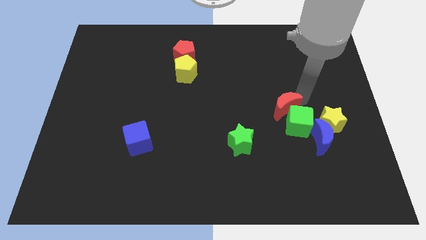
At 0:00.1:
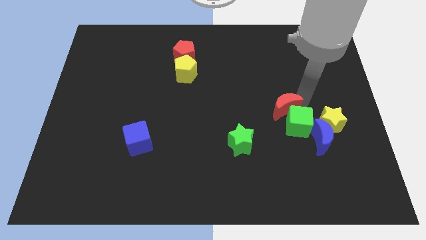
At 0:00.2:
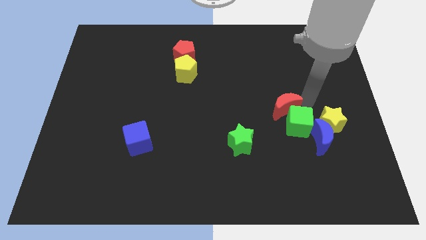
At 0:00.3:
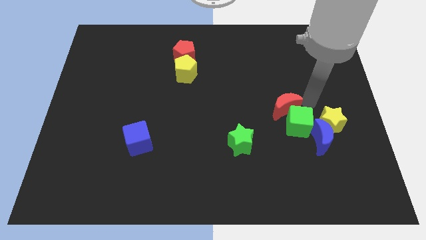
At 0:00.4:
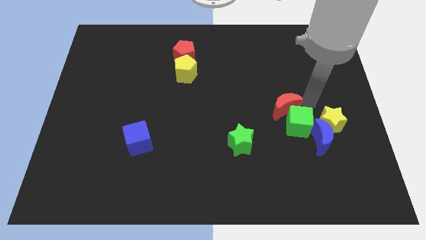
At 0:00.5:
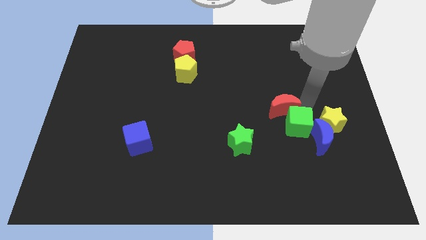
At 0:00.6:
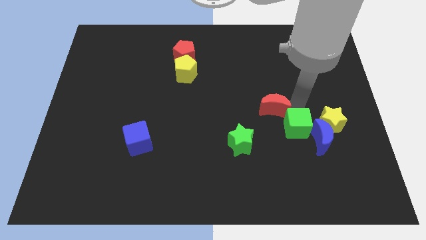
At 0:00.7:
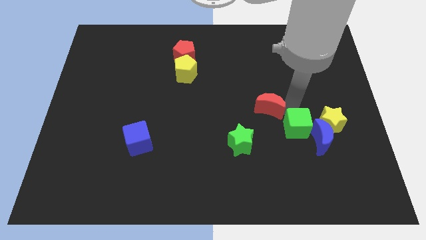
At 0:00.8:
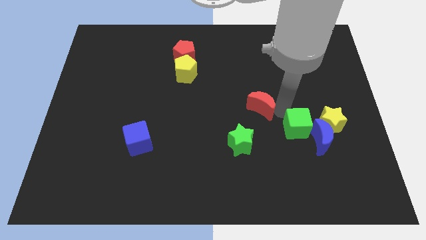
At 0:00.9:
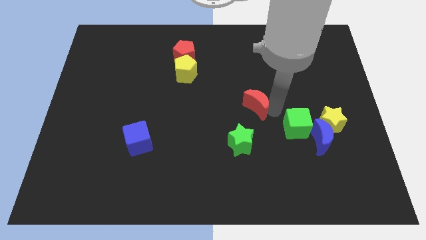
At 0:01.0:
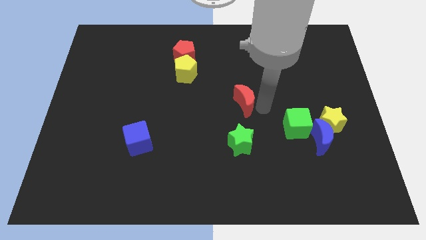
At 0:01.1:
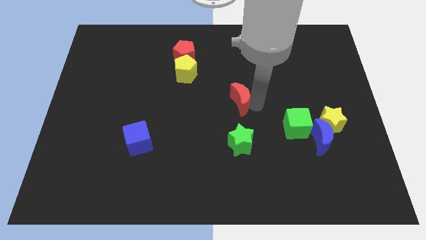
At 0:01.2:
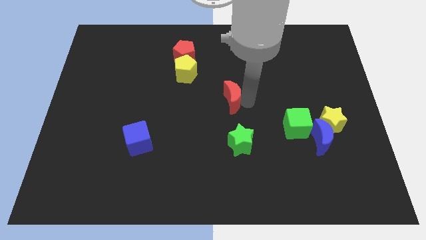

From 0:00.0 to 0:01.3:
push red crescent above green star

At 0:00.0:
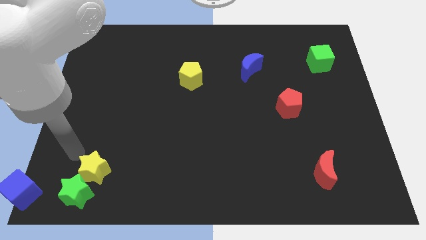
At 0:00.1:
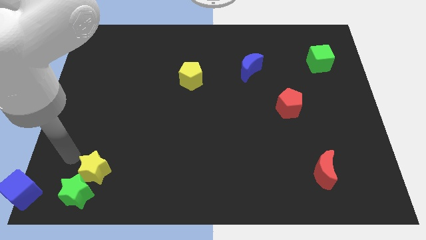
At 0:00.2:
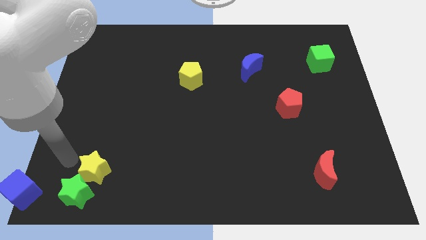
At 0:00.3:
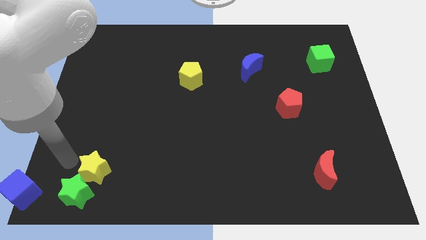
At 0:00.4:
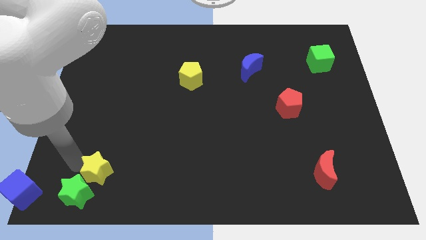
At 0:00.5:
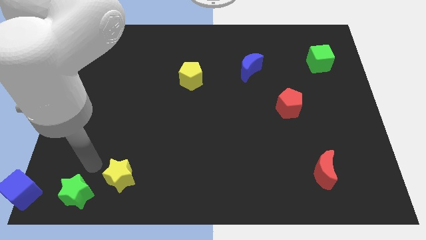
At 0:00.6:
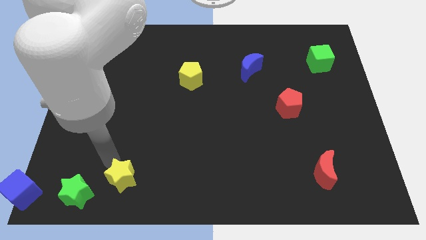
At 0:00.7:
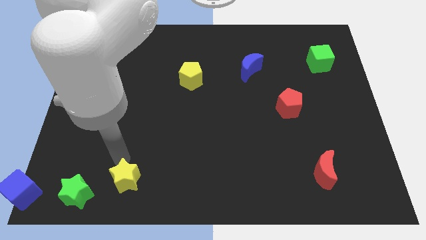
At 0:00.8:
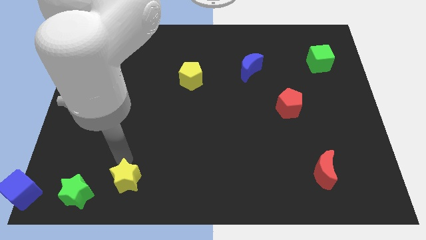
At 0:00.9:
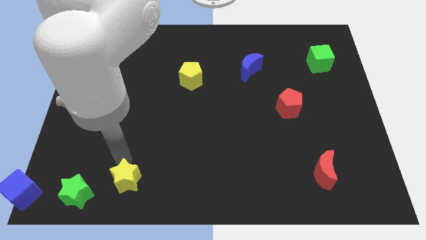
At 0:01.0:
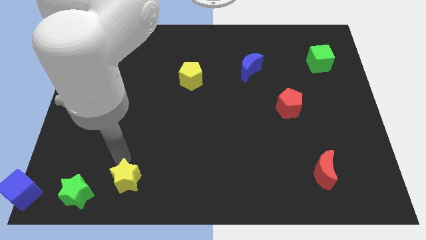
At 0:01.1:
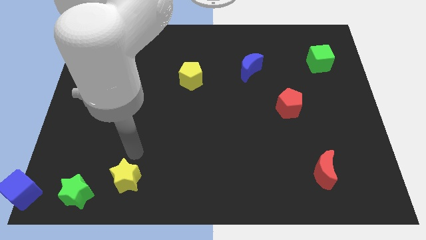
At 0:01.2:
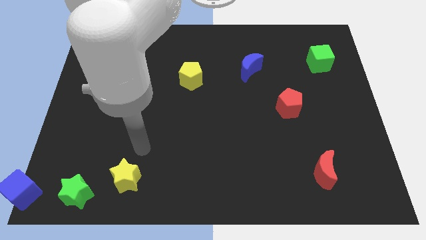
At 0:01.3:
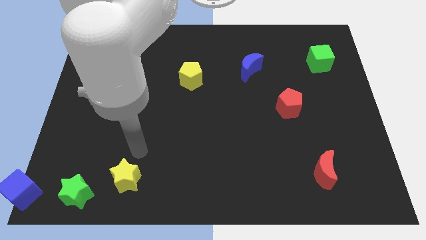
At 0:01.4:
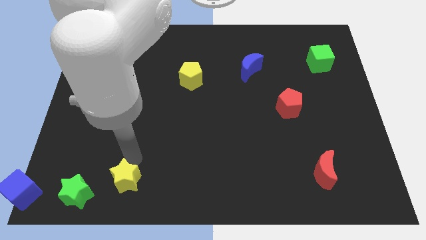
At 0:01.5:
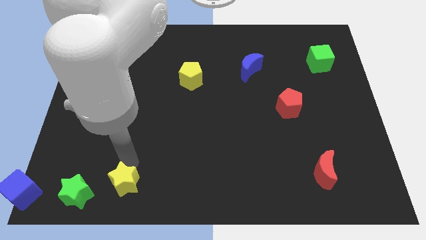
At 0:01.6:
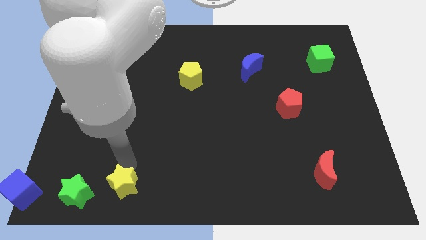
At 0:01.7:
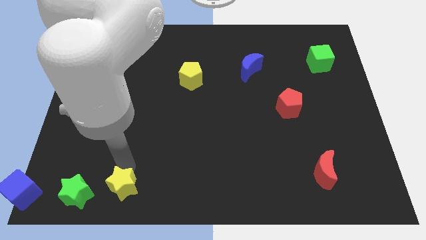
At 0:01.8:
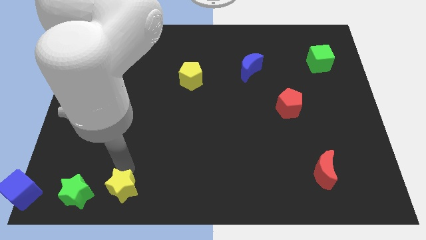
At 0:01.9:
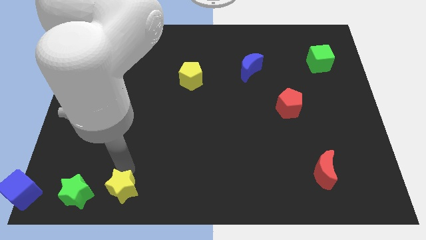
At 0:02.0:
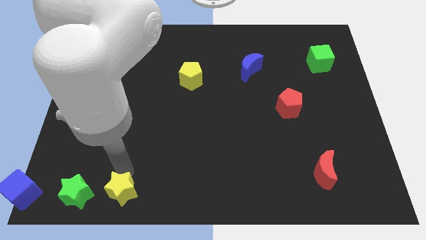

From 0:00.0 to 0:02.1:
move yellow star parallel to green star

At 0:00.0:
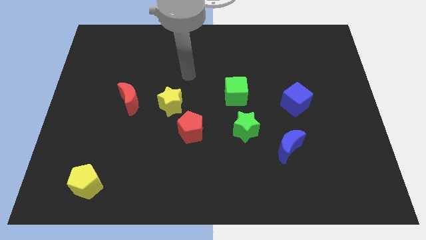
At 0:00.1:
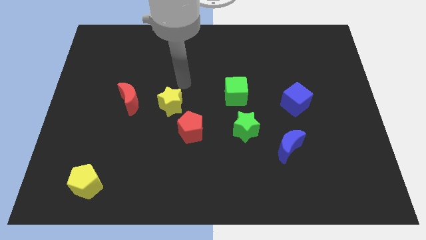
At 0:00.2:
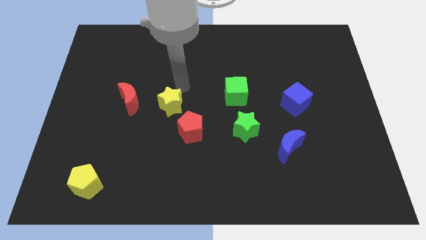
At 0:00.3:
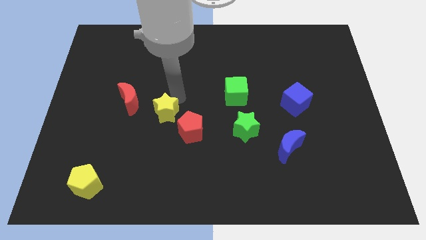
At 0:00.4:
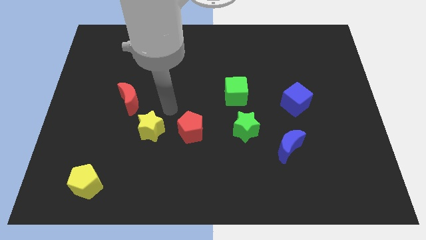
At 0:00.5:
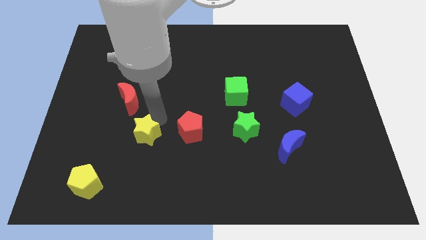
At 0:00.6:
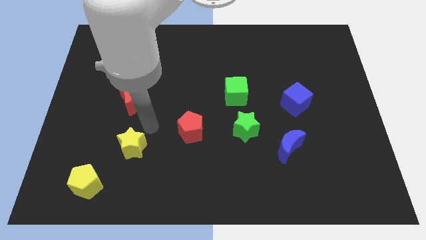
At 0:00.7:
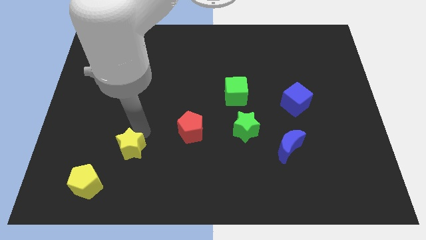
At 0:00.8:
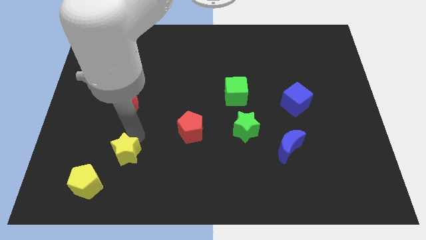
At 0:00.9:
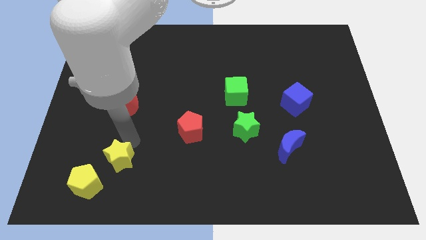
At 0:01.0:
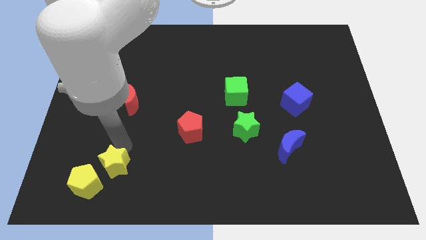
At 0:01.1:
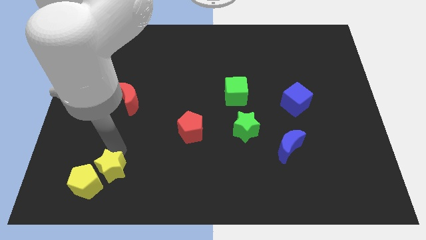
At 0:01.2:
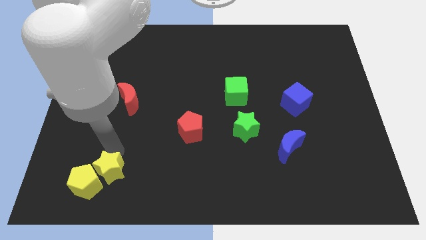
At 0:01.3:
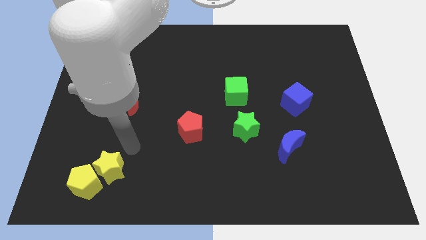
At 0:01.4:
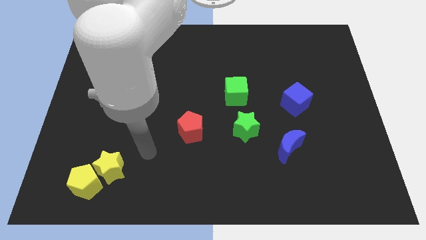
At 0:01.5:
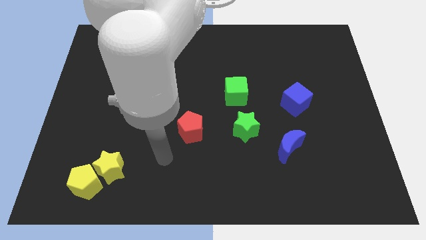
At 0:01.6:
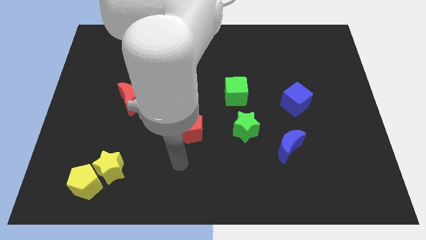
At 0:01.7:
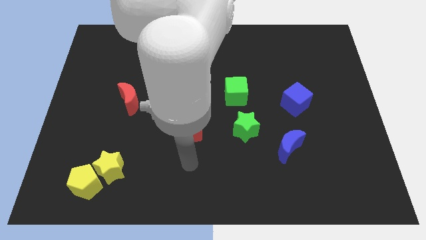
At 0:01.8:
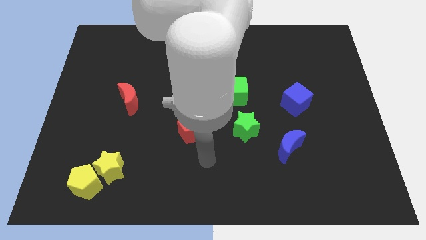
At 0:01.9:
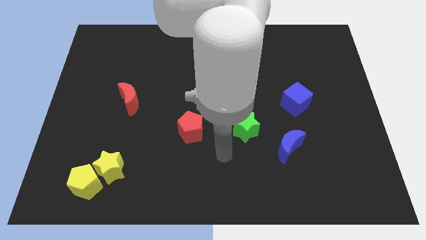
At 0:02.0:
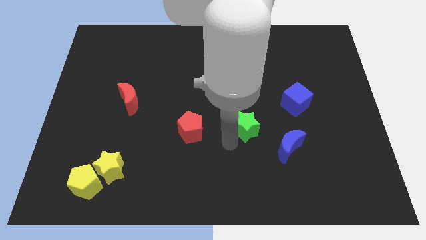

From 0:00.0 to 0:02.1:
push star towards the yellow pentagon

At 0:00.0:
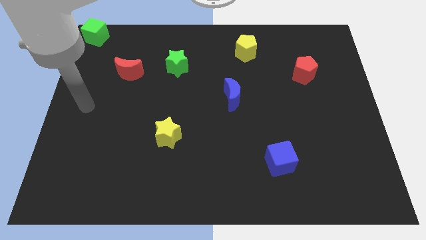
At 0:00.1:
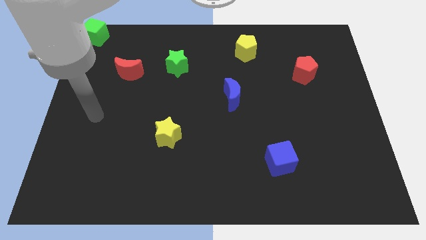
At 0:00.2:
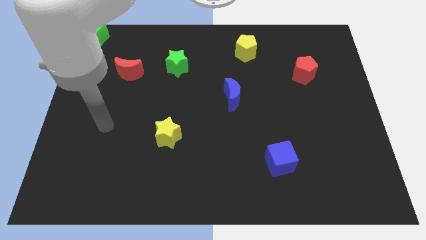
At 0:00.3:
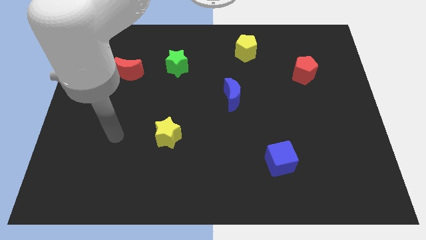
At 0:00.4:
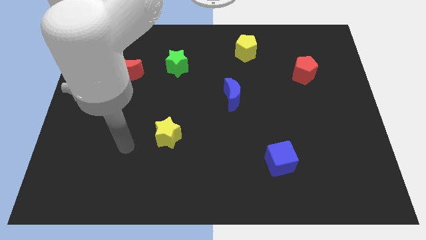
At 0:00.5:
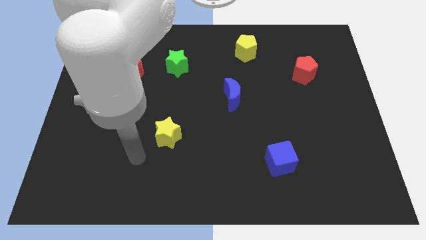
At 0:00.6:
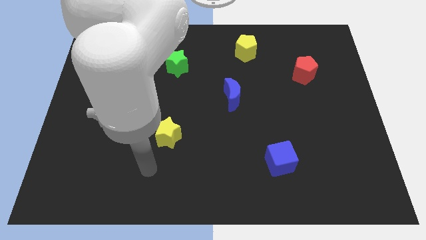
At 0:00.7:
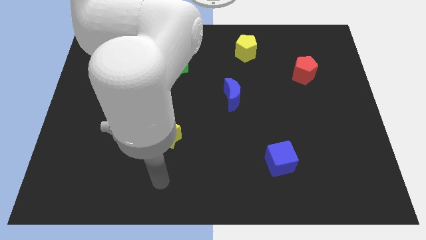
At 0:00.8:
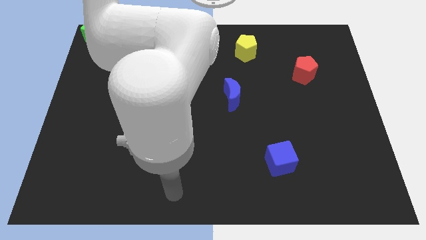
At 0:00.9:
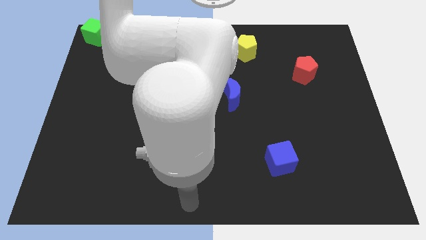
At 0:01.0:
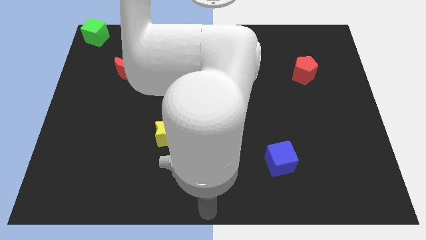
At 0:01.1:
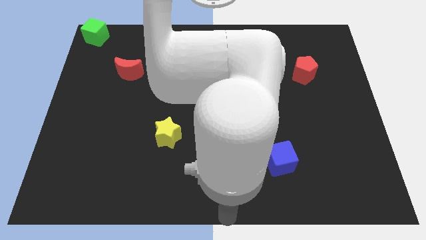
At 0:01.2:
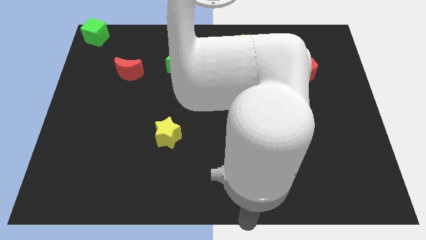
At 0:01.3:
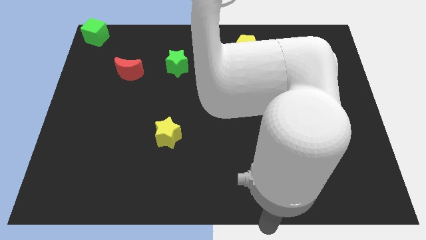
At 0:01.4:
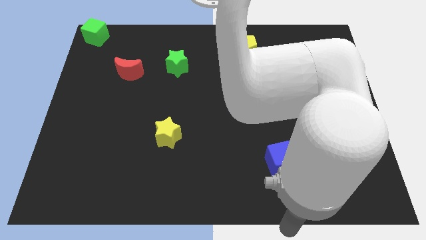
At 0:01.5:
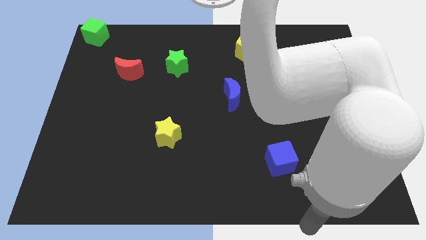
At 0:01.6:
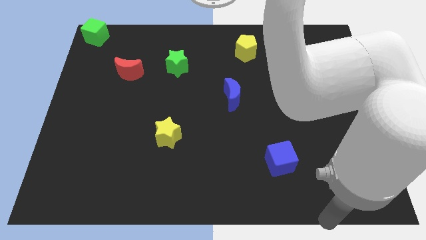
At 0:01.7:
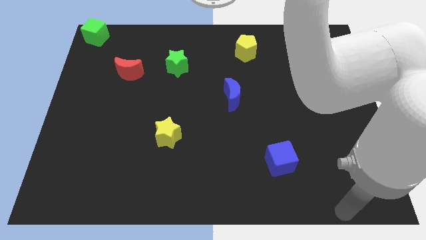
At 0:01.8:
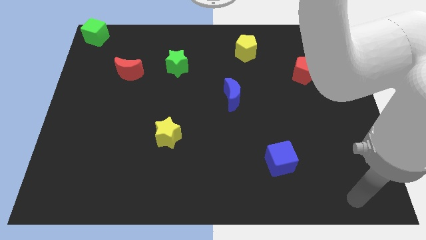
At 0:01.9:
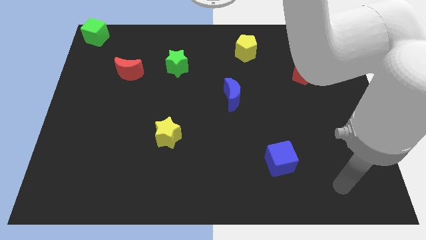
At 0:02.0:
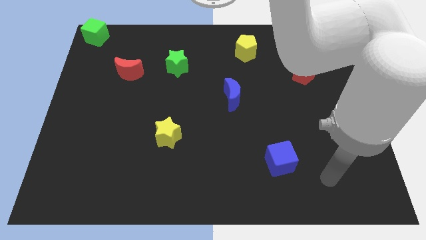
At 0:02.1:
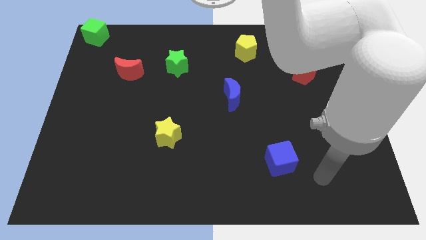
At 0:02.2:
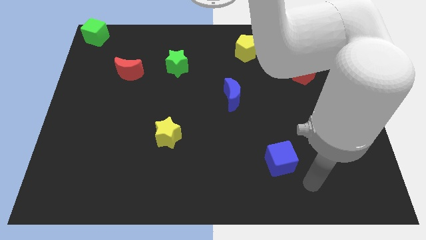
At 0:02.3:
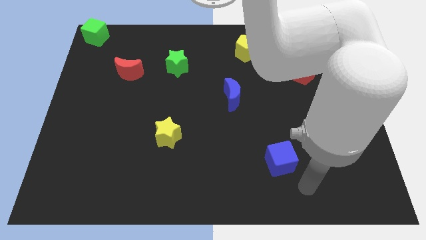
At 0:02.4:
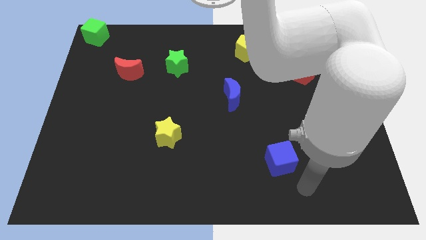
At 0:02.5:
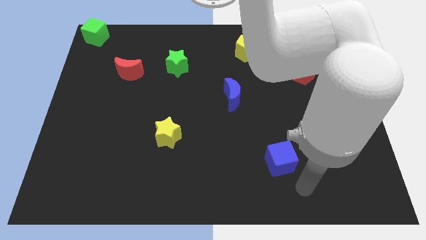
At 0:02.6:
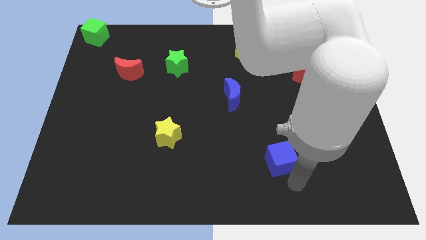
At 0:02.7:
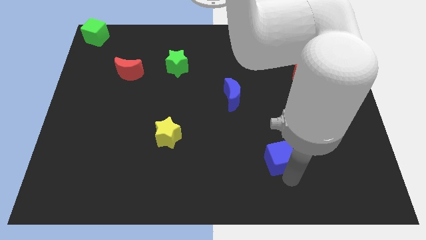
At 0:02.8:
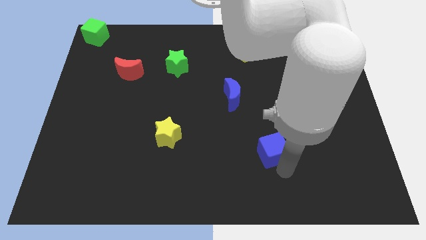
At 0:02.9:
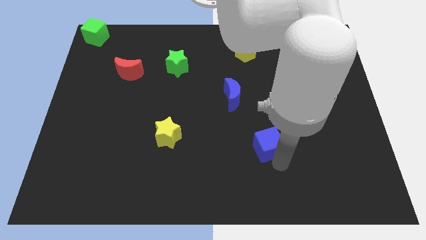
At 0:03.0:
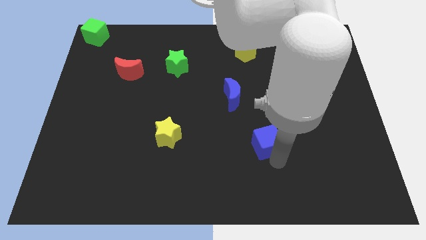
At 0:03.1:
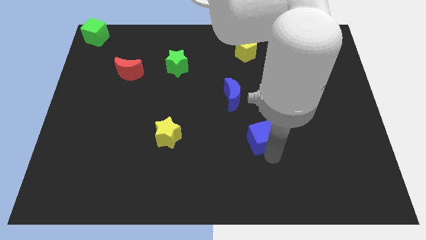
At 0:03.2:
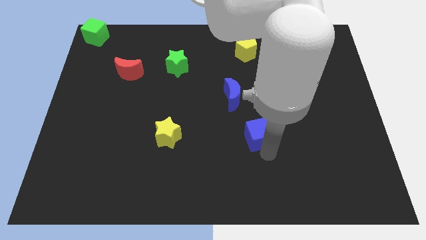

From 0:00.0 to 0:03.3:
move blue cube slightly up

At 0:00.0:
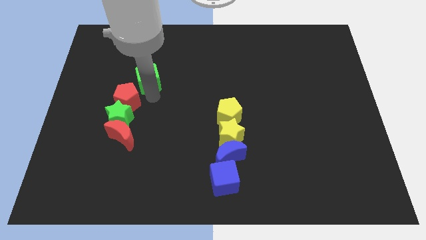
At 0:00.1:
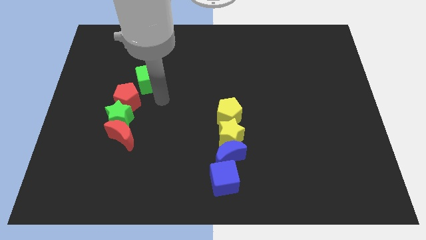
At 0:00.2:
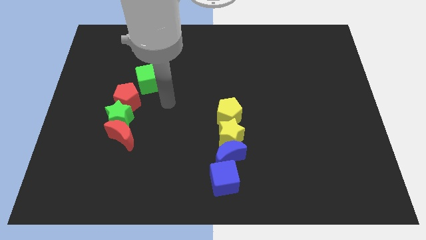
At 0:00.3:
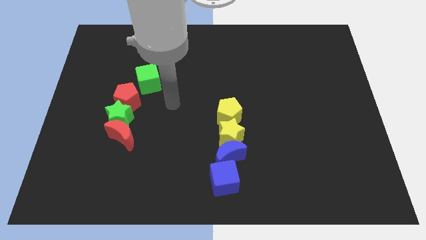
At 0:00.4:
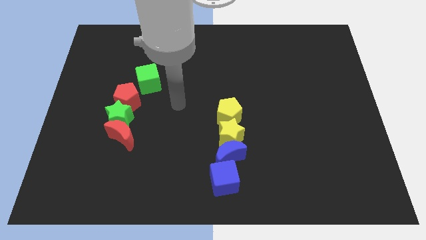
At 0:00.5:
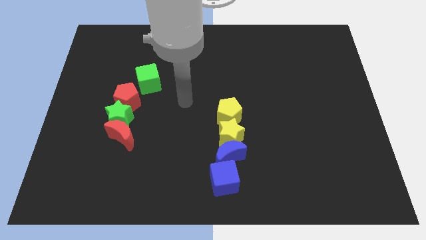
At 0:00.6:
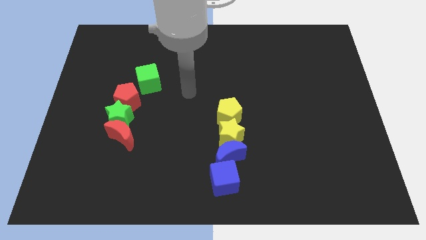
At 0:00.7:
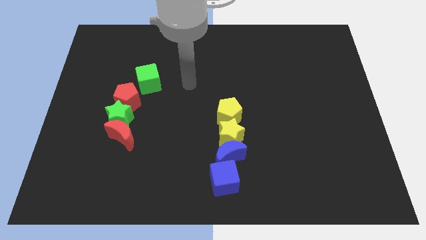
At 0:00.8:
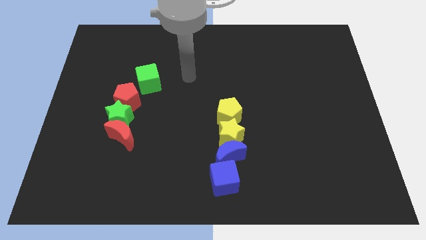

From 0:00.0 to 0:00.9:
move your hand towards the right of the green cube
